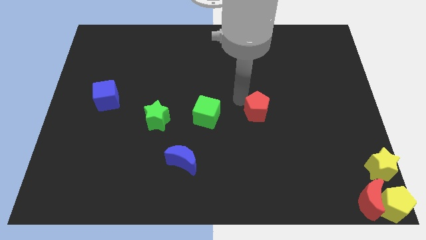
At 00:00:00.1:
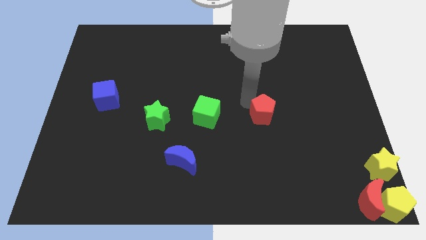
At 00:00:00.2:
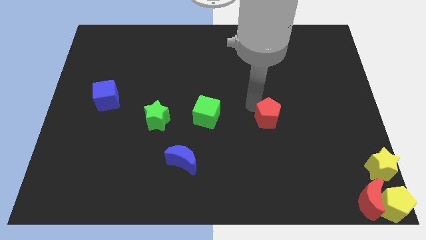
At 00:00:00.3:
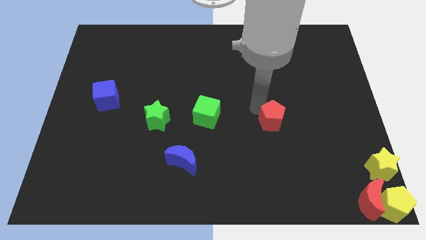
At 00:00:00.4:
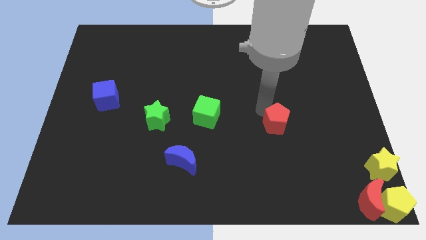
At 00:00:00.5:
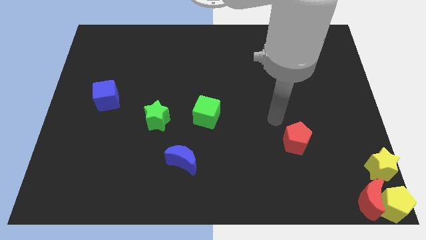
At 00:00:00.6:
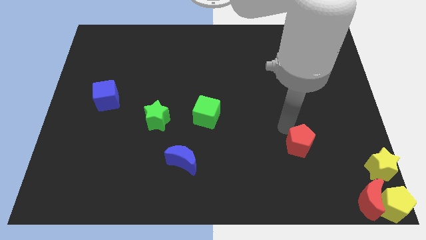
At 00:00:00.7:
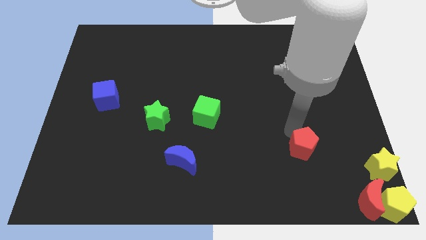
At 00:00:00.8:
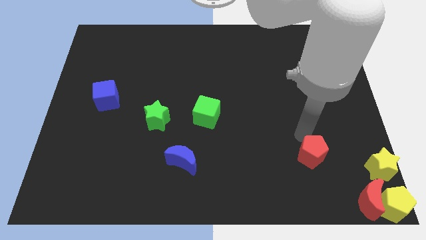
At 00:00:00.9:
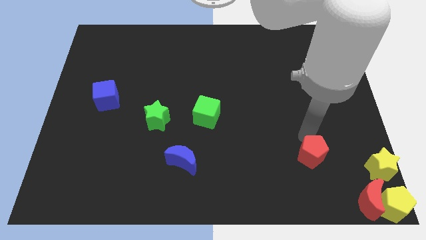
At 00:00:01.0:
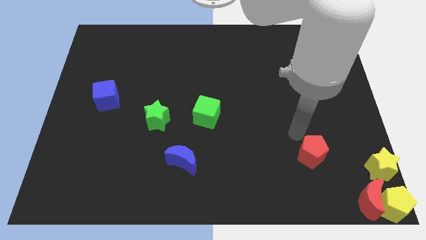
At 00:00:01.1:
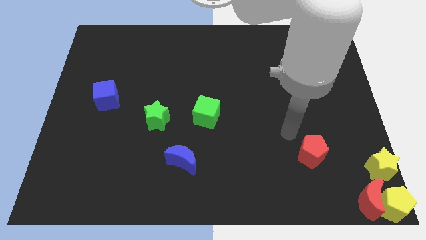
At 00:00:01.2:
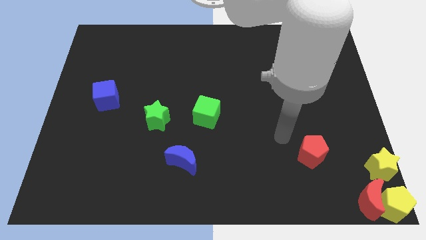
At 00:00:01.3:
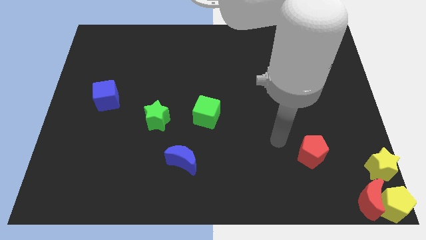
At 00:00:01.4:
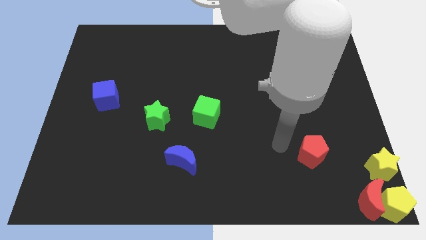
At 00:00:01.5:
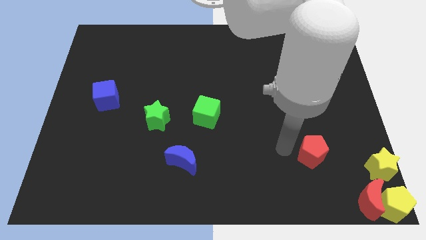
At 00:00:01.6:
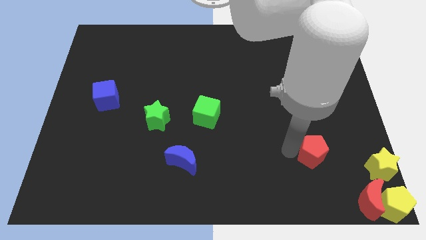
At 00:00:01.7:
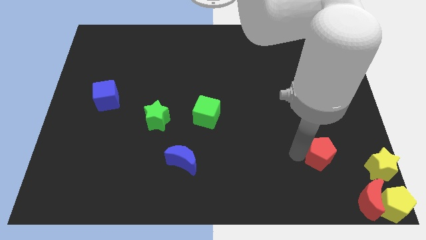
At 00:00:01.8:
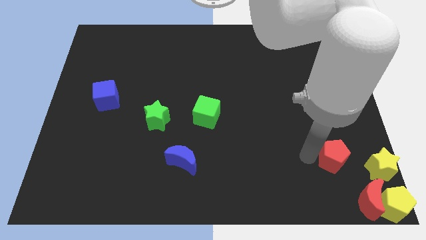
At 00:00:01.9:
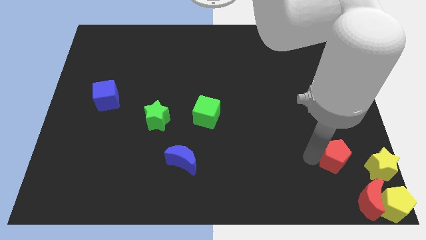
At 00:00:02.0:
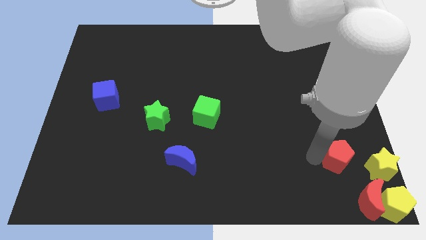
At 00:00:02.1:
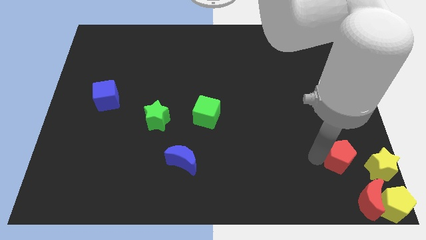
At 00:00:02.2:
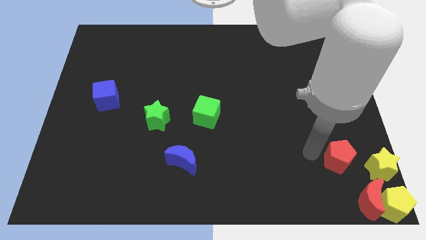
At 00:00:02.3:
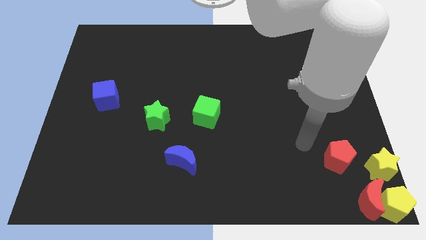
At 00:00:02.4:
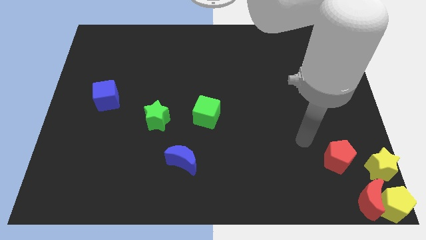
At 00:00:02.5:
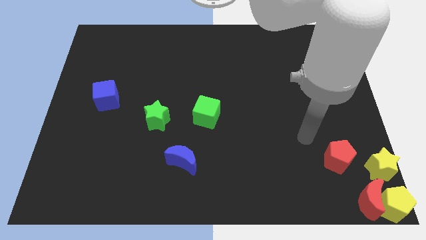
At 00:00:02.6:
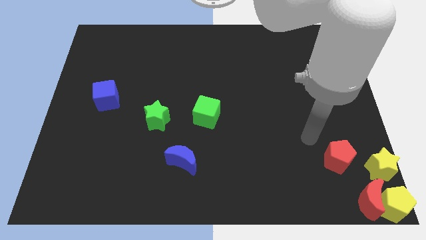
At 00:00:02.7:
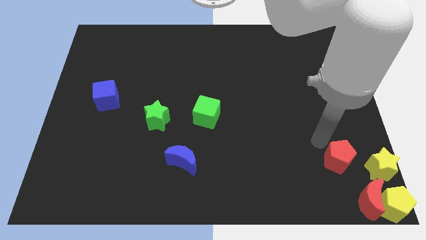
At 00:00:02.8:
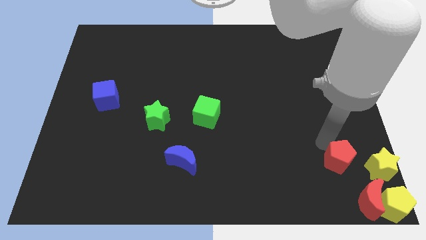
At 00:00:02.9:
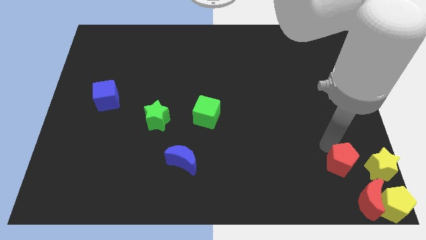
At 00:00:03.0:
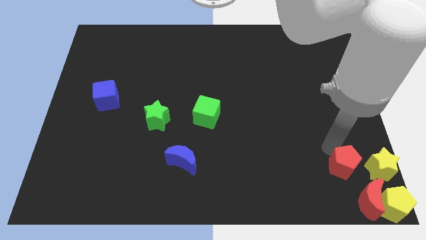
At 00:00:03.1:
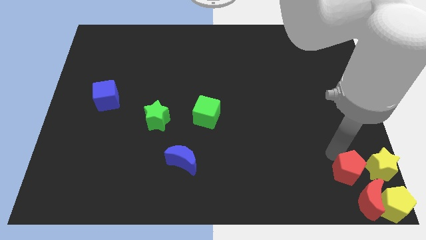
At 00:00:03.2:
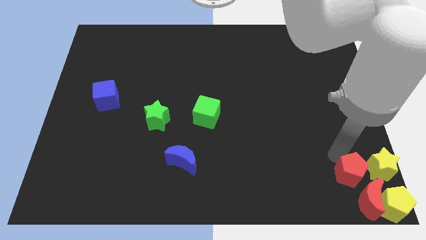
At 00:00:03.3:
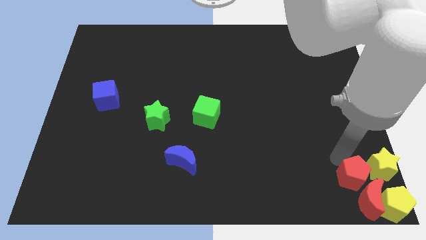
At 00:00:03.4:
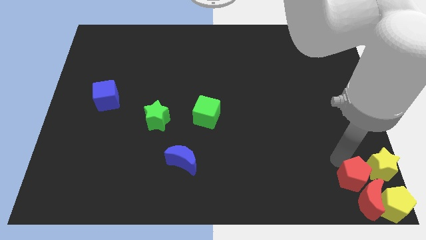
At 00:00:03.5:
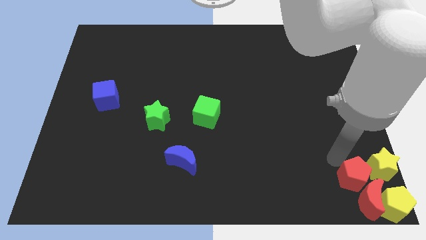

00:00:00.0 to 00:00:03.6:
move the red pentagon to the left of the yellow star

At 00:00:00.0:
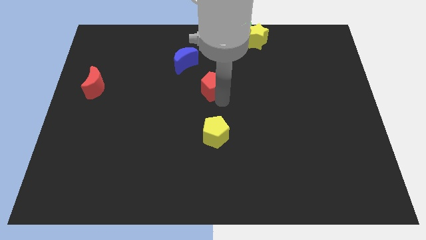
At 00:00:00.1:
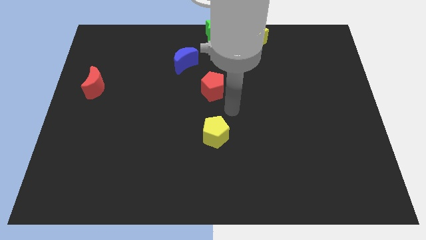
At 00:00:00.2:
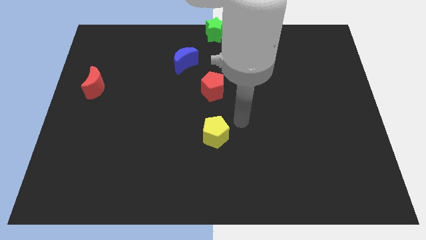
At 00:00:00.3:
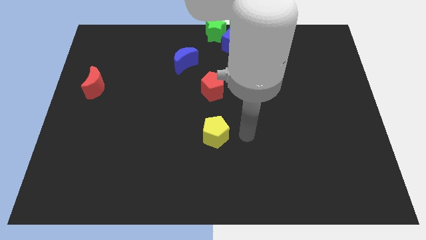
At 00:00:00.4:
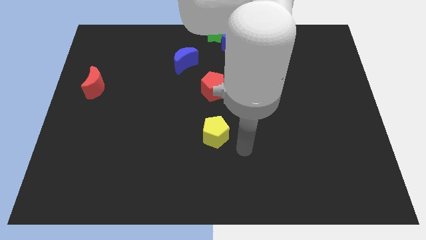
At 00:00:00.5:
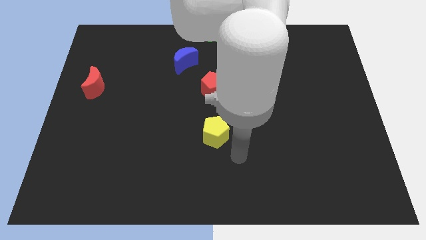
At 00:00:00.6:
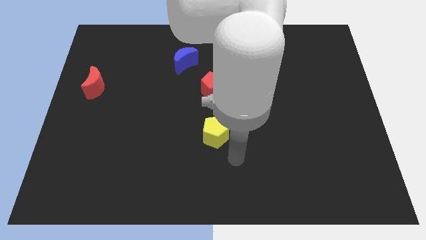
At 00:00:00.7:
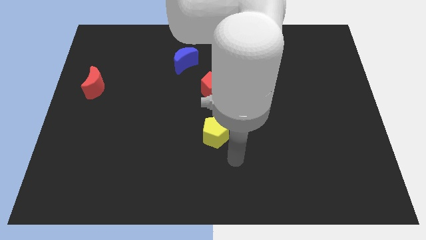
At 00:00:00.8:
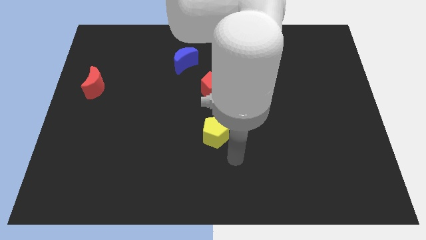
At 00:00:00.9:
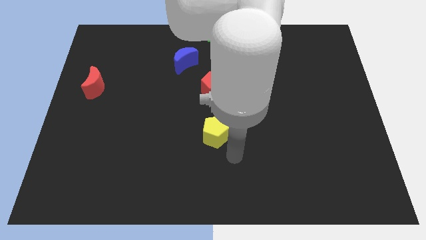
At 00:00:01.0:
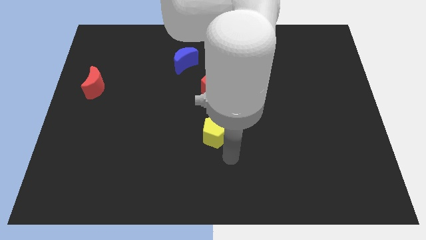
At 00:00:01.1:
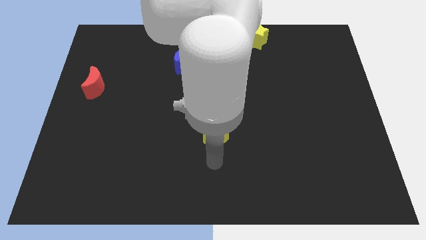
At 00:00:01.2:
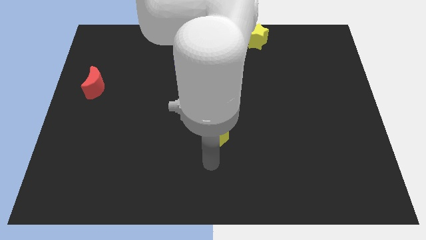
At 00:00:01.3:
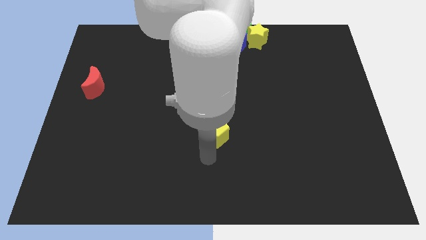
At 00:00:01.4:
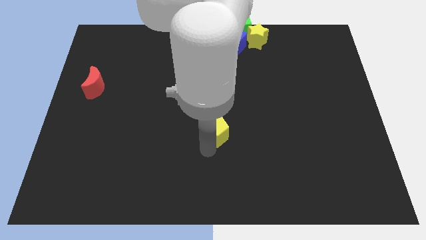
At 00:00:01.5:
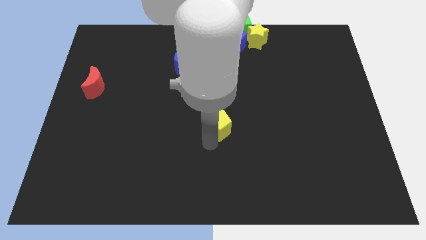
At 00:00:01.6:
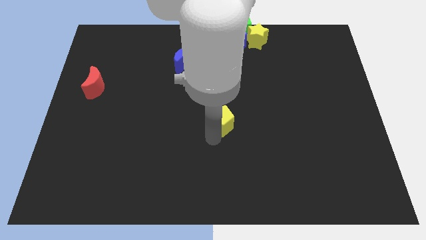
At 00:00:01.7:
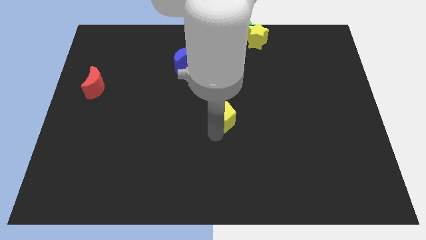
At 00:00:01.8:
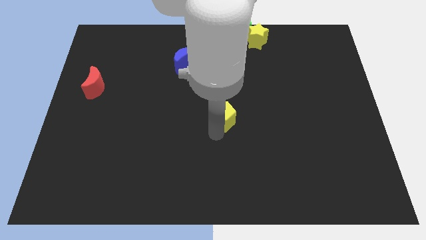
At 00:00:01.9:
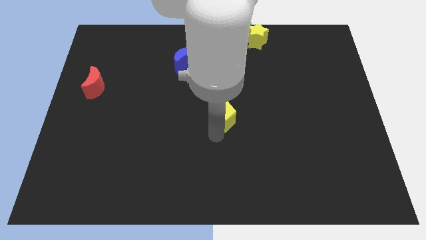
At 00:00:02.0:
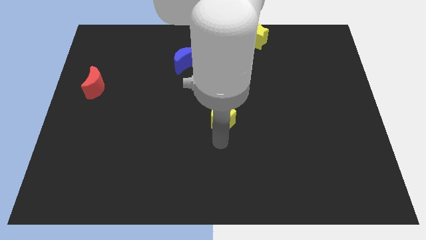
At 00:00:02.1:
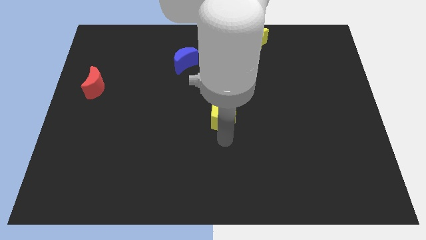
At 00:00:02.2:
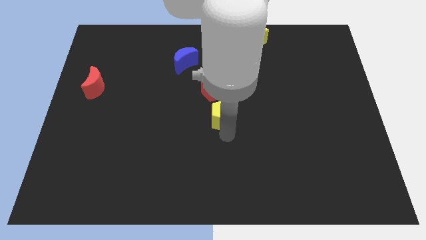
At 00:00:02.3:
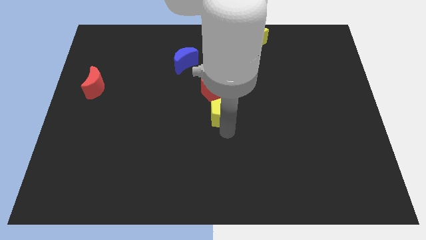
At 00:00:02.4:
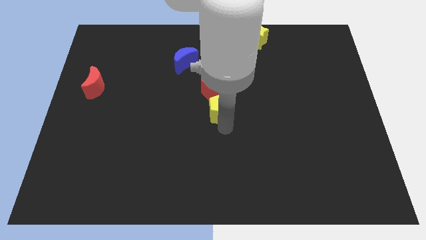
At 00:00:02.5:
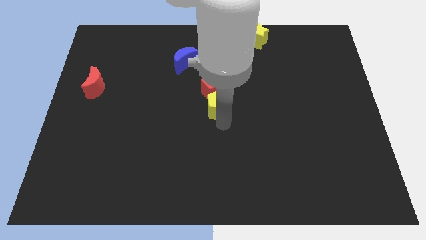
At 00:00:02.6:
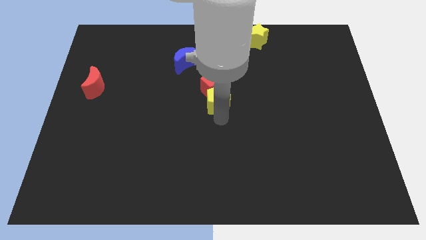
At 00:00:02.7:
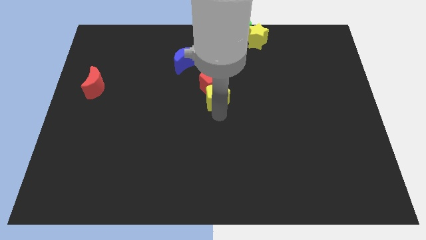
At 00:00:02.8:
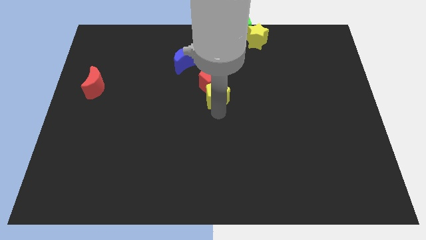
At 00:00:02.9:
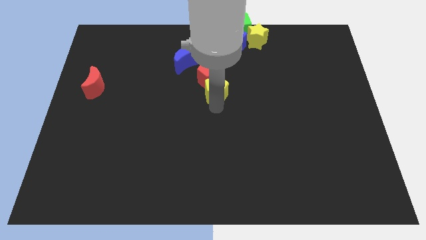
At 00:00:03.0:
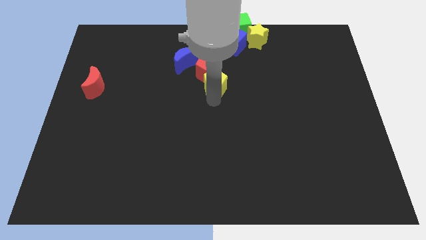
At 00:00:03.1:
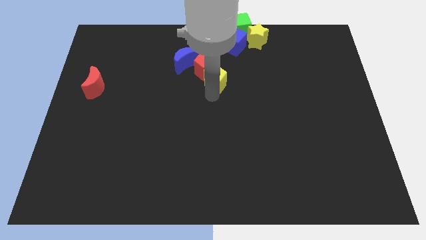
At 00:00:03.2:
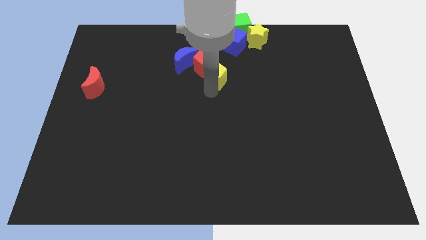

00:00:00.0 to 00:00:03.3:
push the yellow pentagon into the red pentagon

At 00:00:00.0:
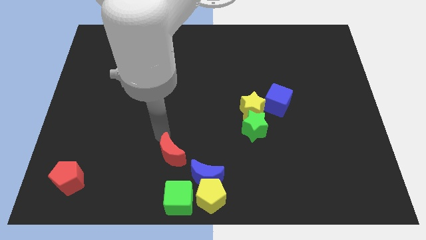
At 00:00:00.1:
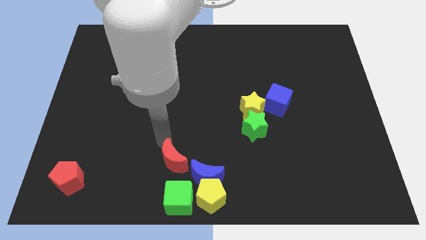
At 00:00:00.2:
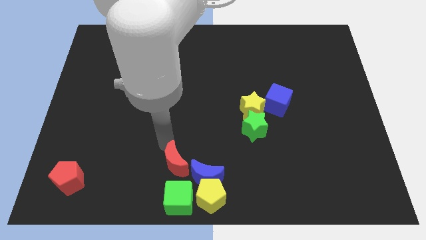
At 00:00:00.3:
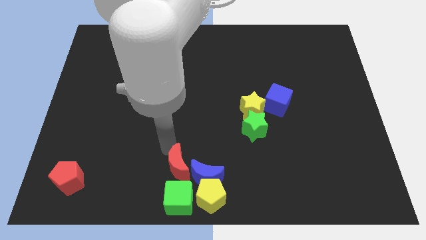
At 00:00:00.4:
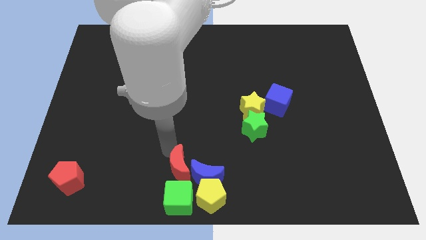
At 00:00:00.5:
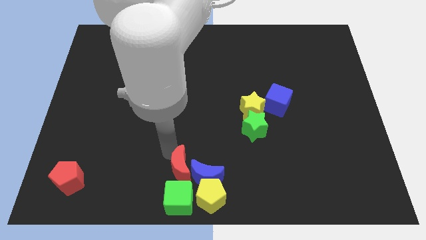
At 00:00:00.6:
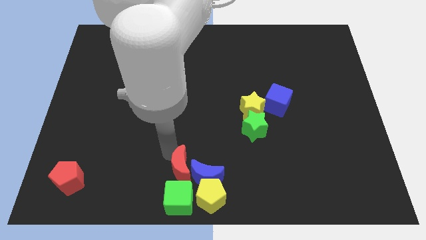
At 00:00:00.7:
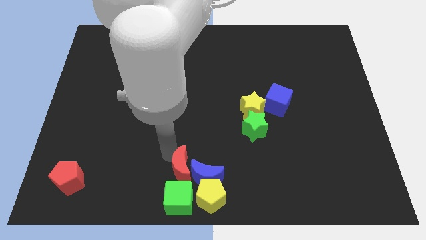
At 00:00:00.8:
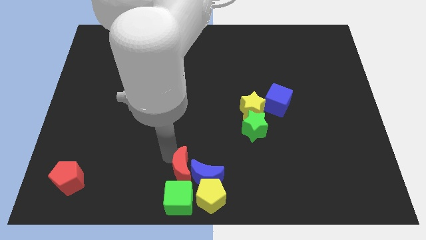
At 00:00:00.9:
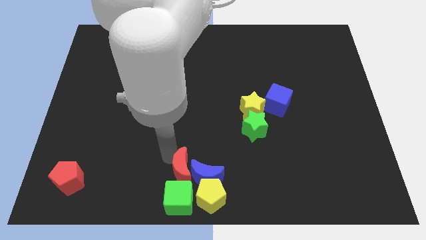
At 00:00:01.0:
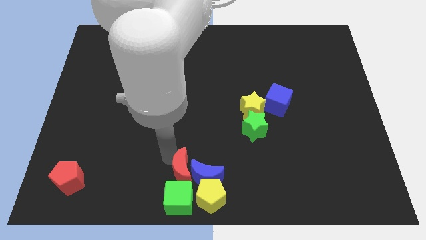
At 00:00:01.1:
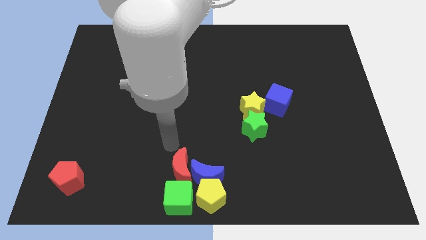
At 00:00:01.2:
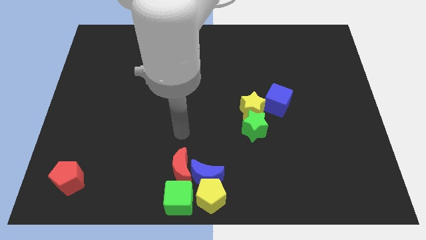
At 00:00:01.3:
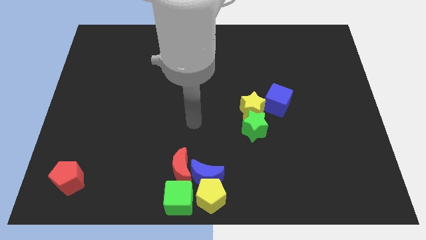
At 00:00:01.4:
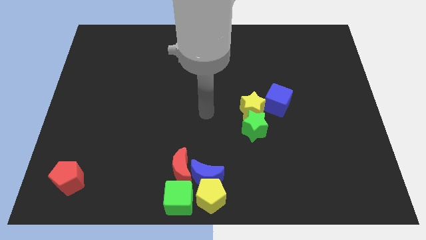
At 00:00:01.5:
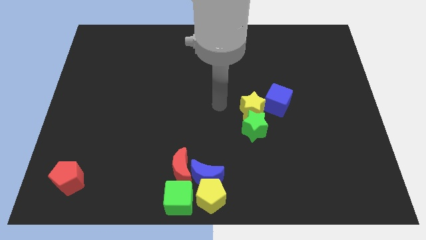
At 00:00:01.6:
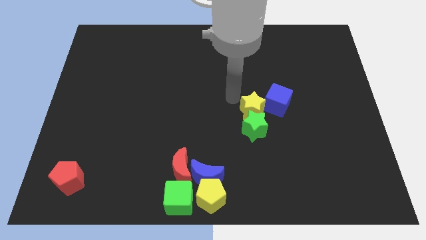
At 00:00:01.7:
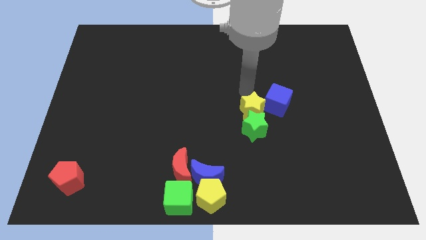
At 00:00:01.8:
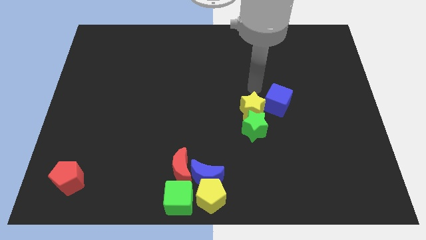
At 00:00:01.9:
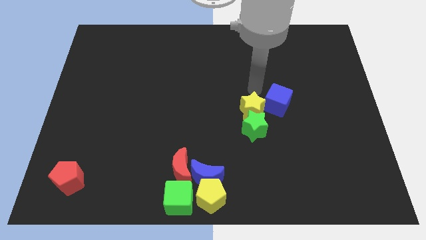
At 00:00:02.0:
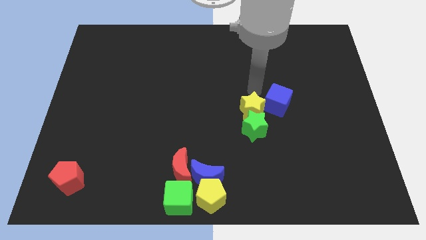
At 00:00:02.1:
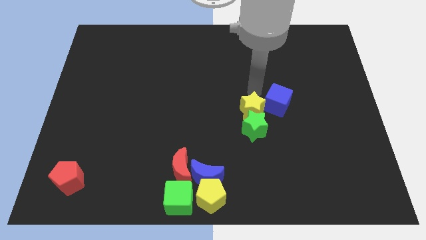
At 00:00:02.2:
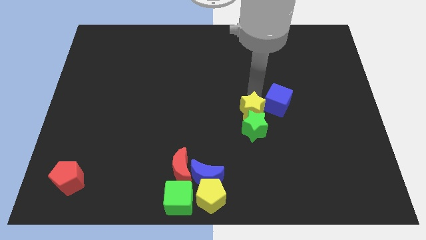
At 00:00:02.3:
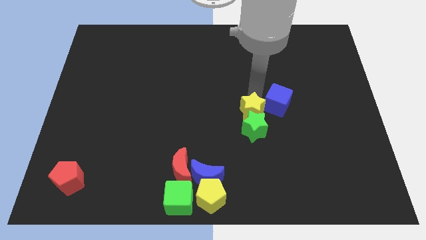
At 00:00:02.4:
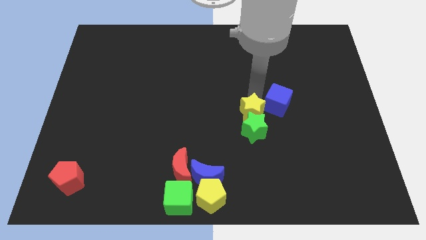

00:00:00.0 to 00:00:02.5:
place the arm above the yellow star
